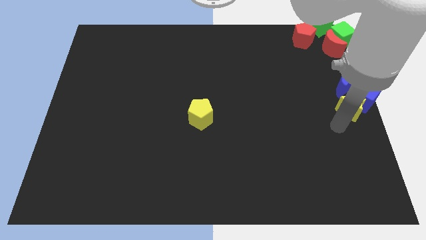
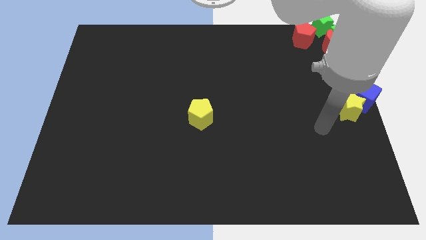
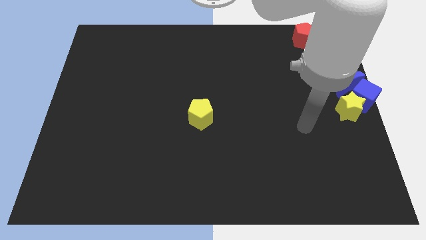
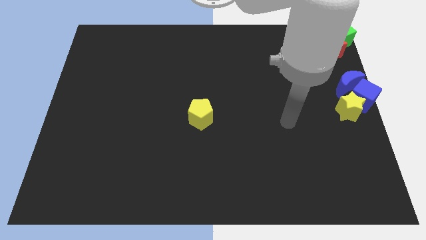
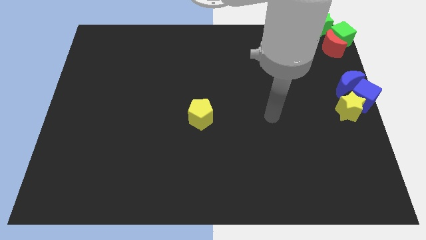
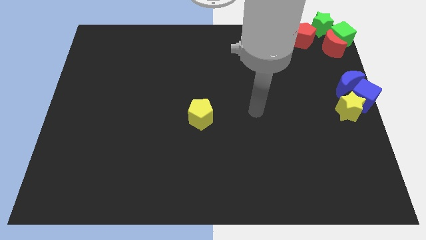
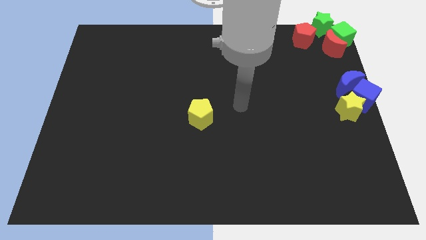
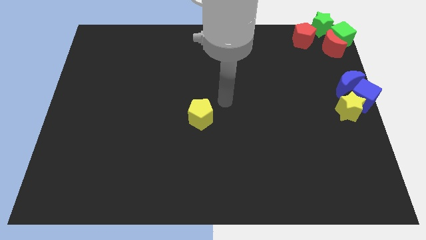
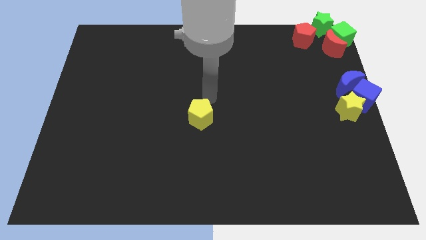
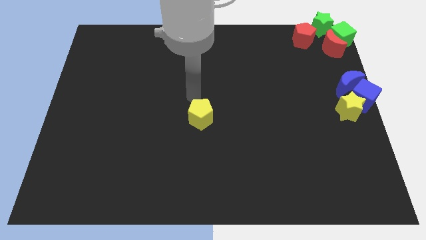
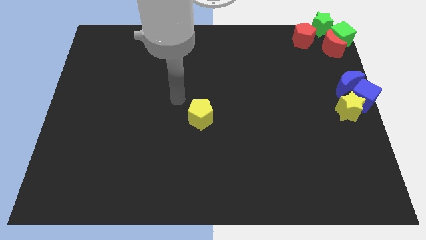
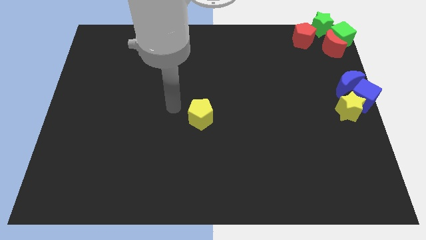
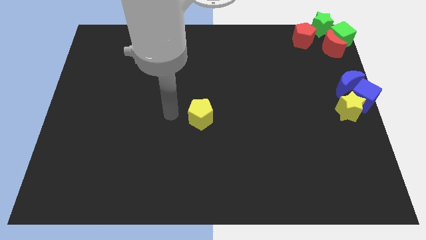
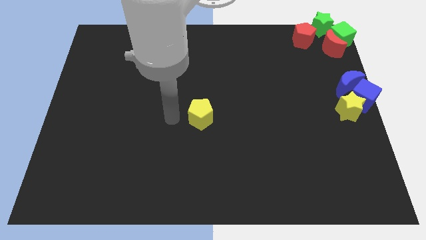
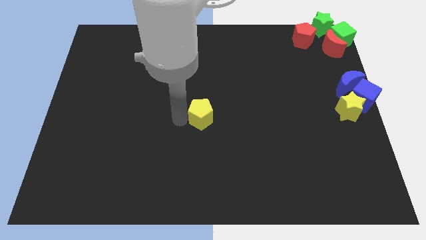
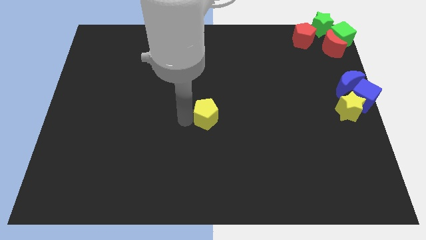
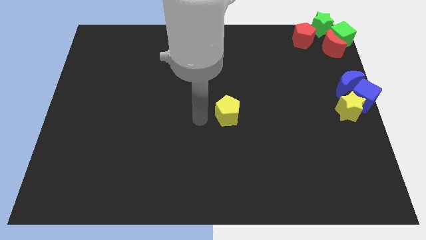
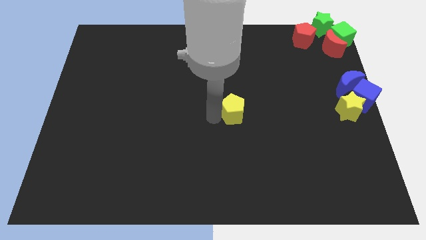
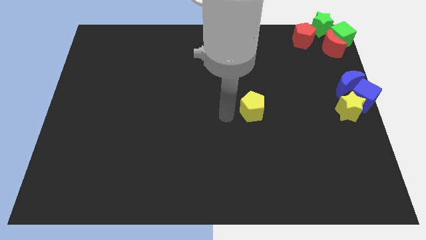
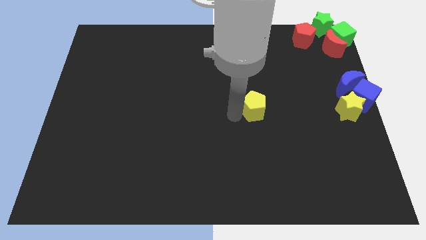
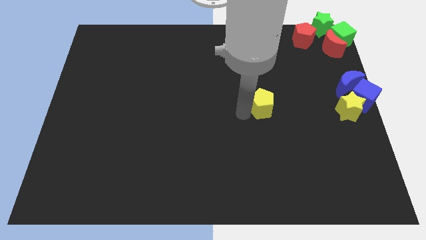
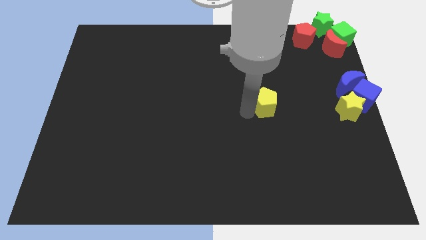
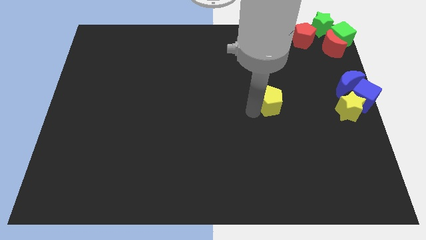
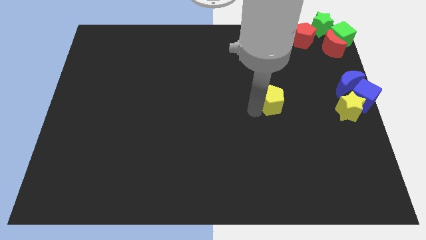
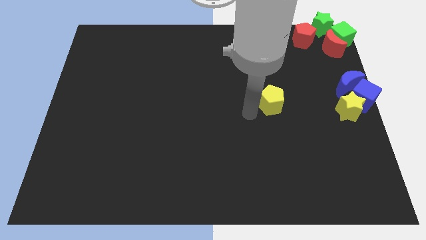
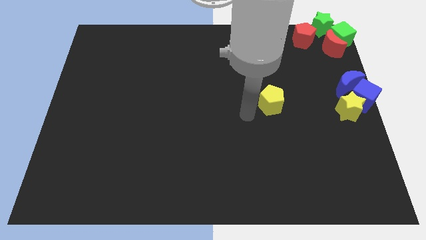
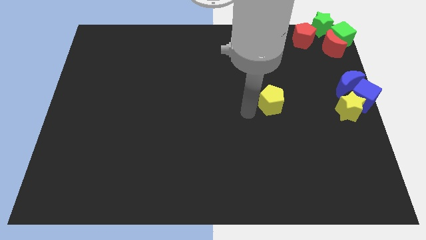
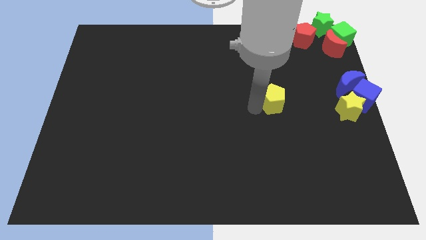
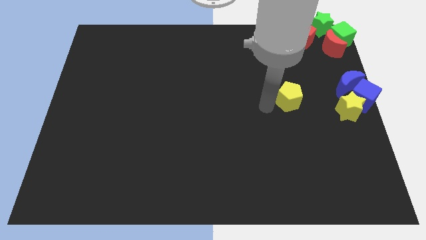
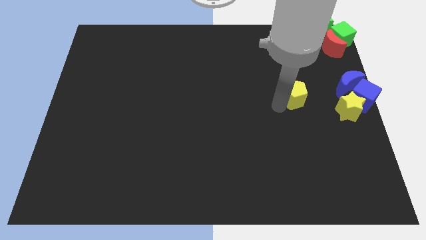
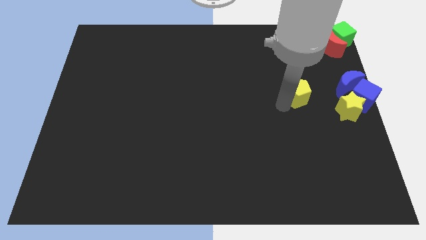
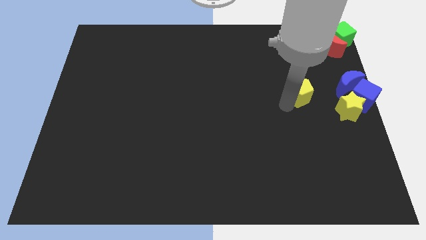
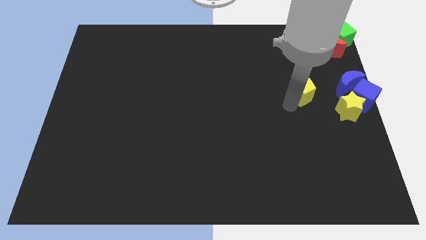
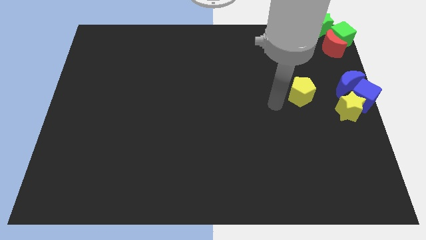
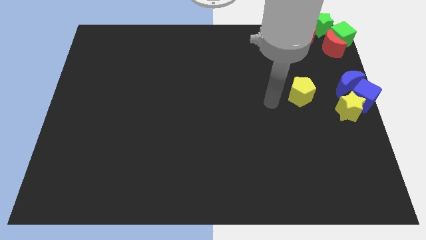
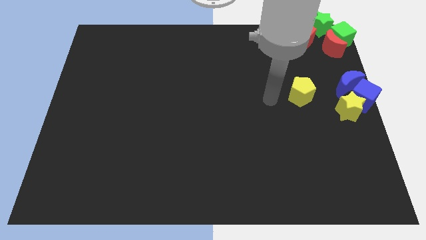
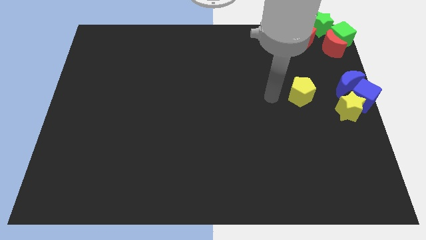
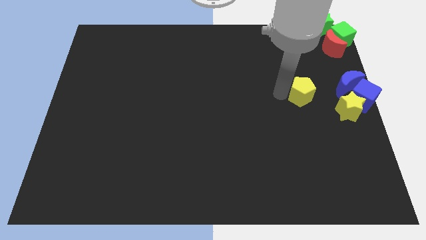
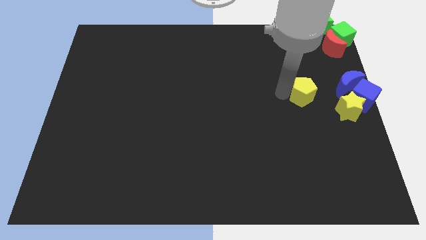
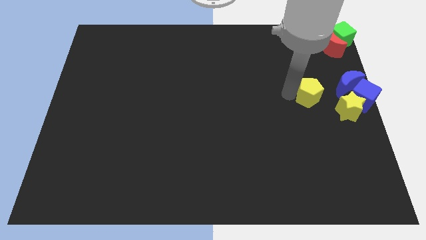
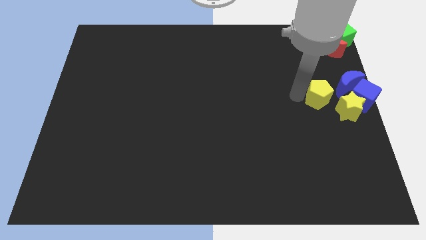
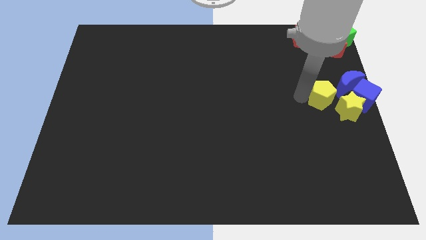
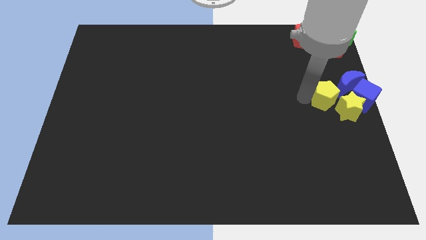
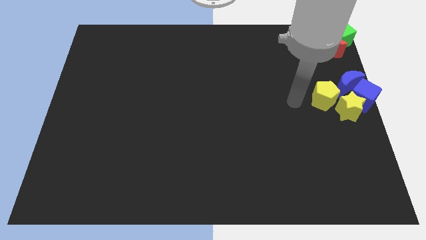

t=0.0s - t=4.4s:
slide the yellow pentagon close to the group of blocks at the center right of the table

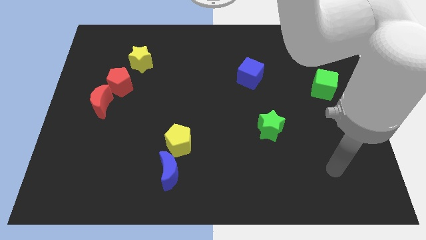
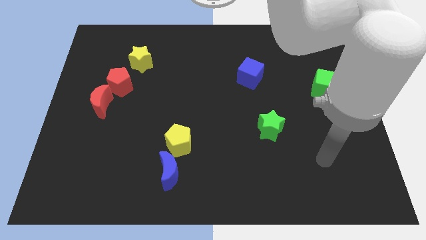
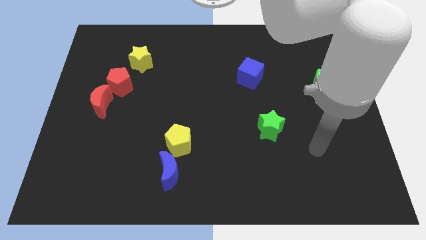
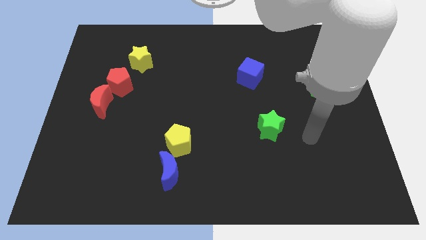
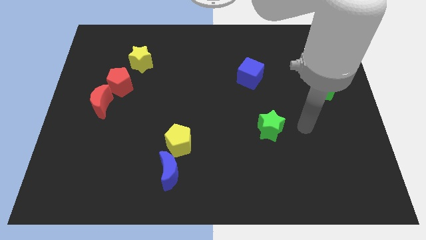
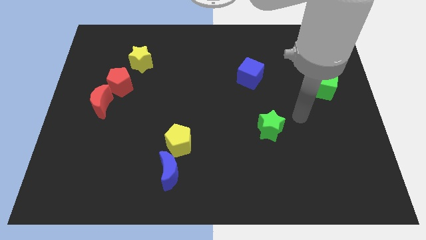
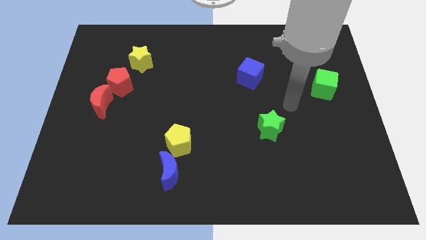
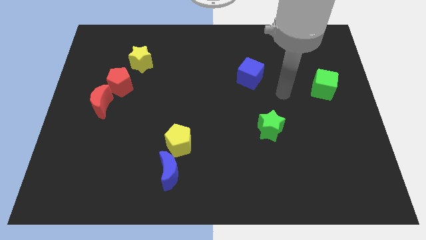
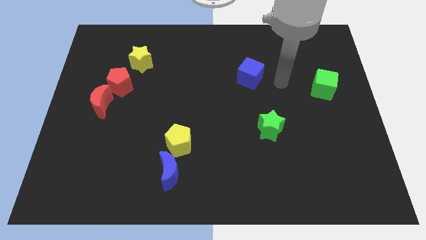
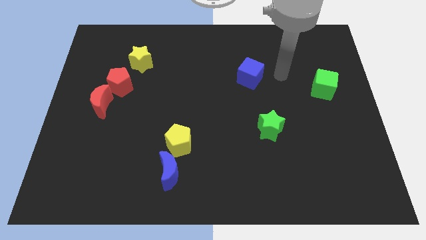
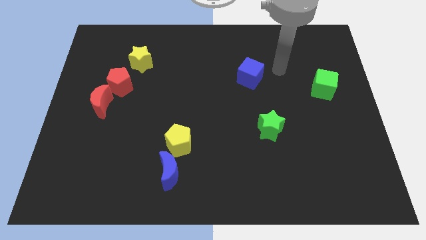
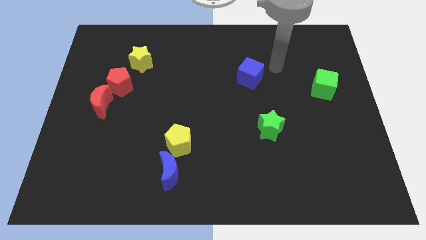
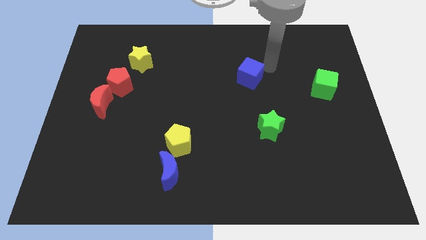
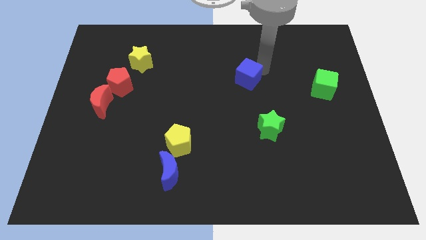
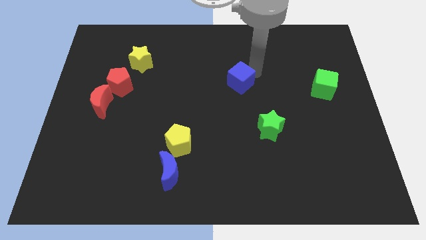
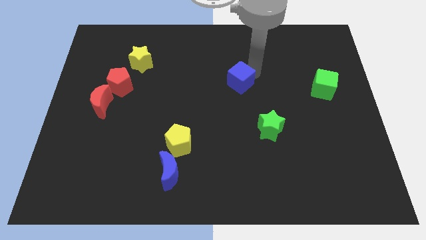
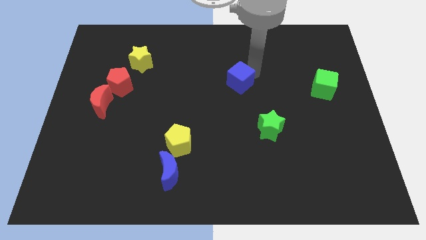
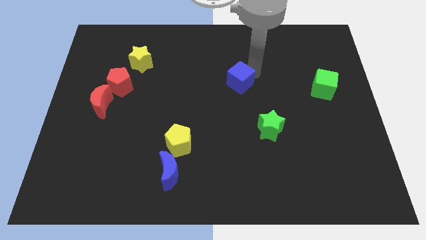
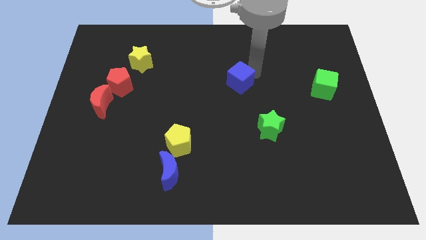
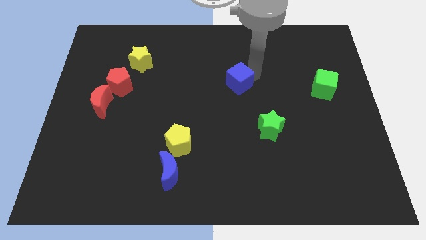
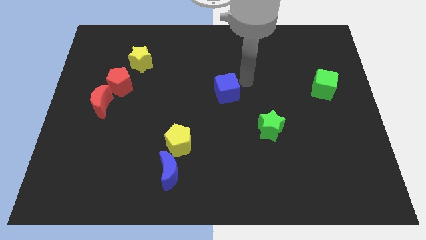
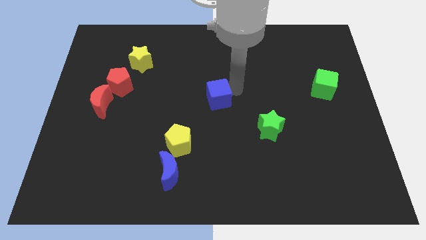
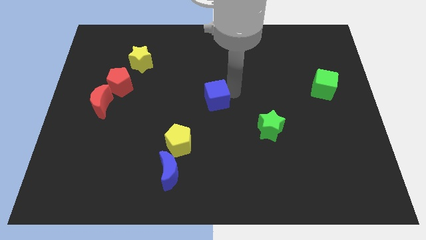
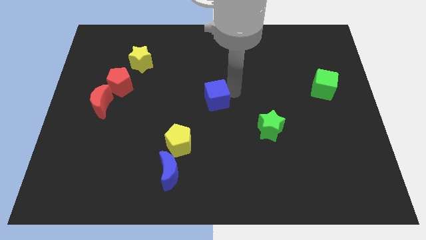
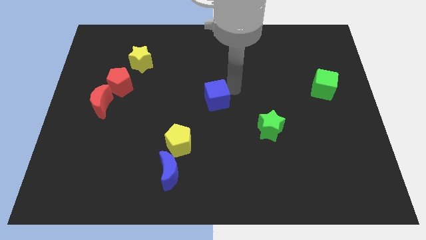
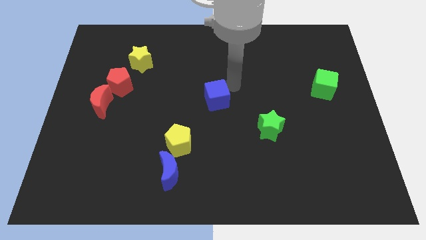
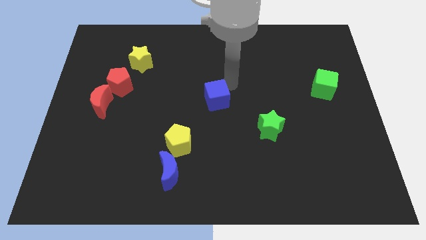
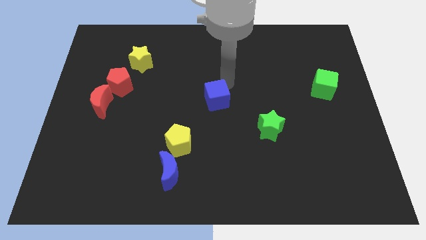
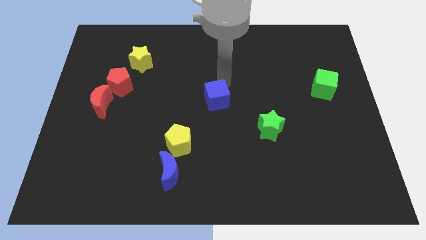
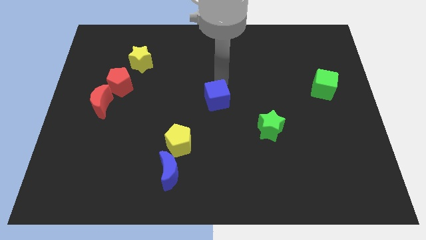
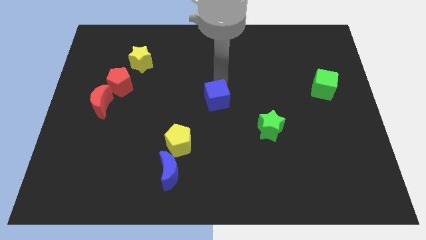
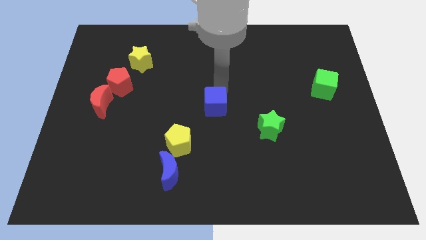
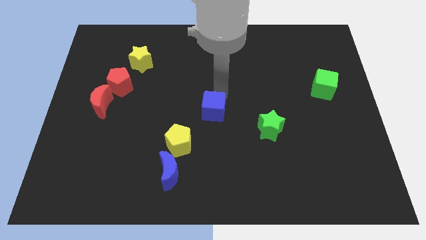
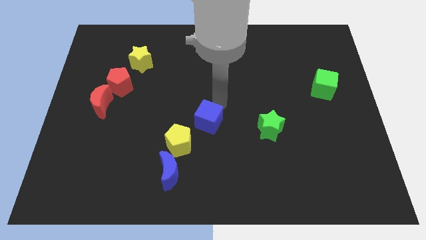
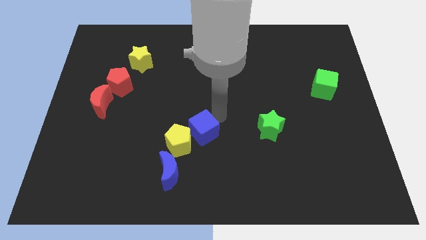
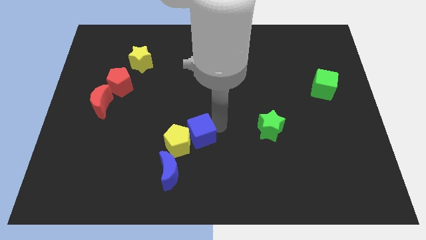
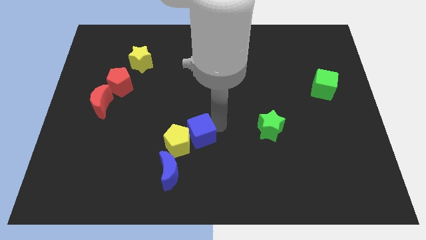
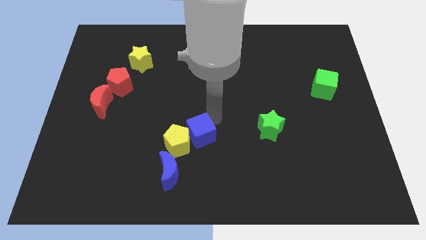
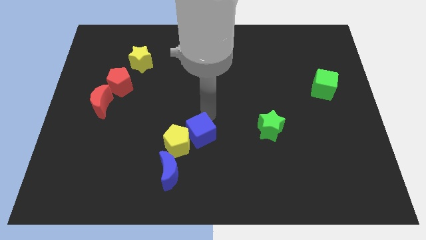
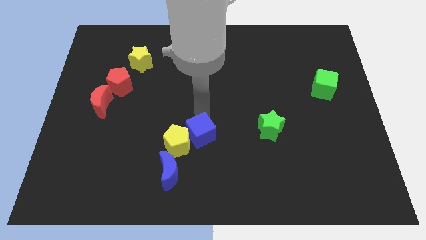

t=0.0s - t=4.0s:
move the blue cube into the yellow pentagon

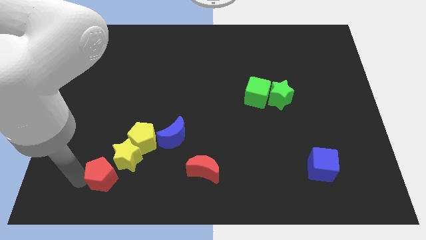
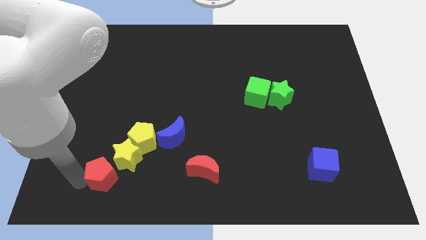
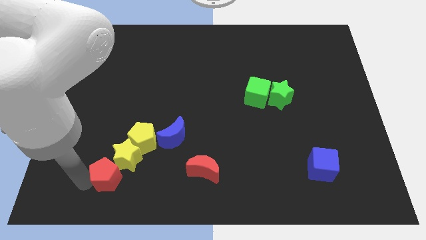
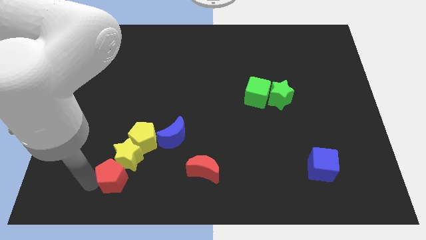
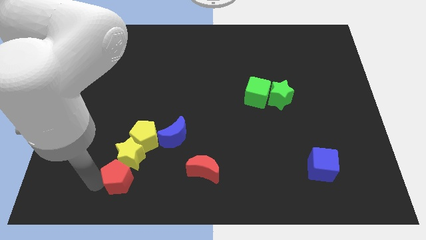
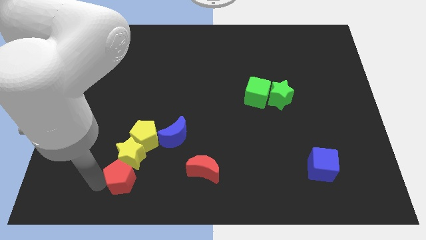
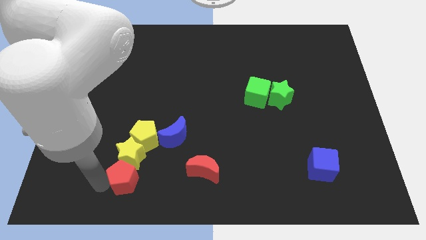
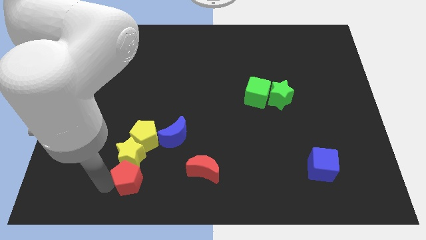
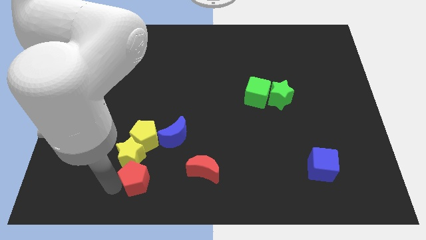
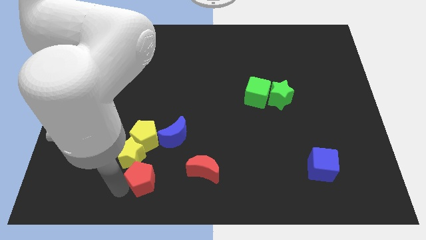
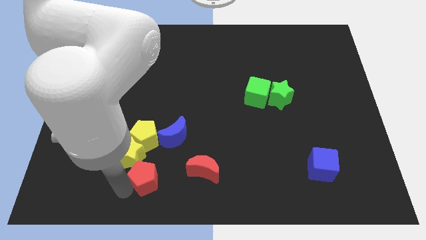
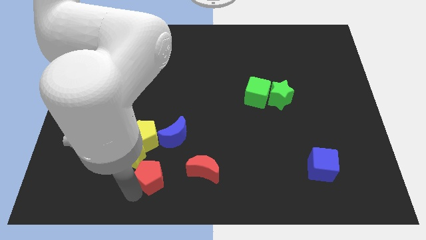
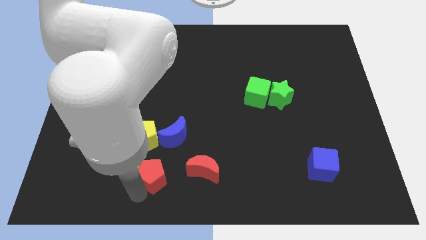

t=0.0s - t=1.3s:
slide red pentagon towards red moon
